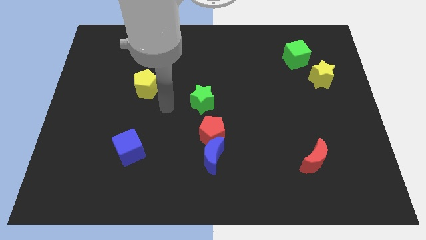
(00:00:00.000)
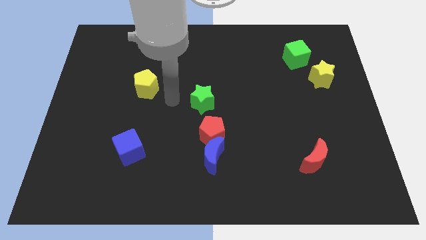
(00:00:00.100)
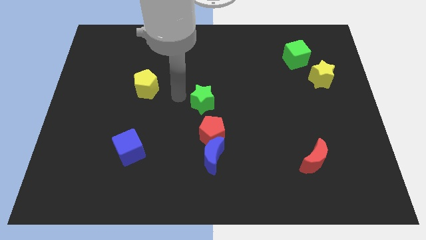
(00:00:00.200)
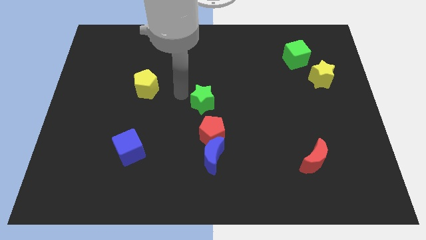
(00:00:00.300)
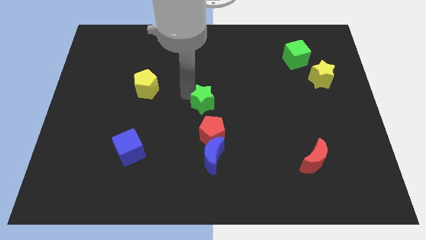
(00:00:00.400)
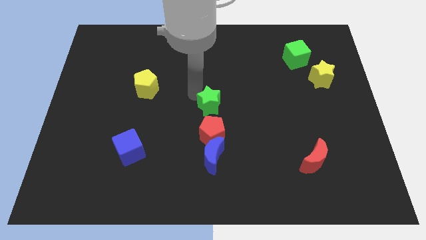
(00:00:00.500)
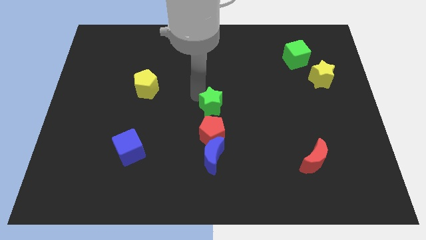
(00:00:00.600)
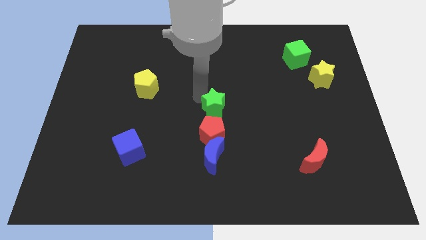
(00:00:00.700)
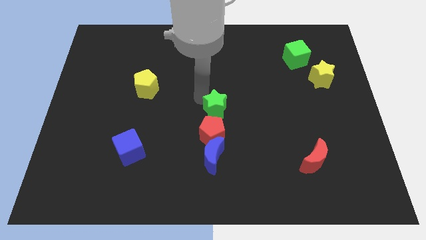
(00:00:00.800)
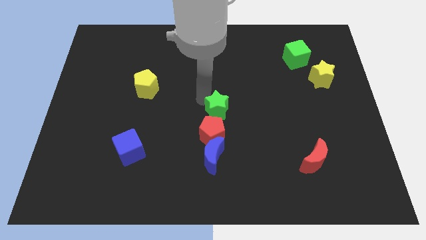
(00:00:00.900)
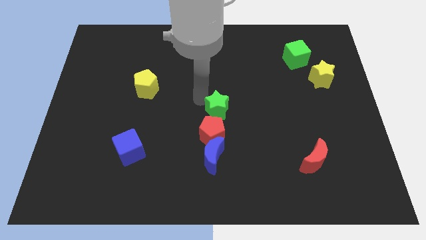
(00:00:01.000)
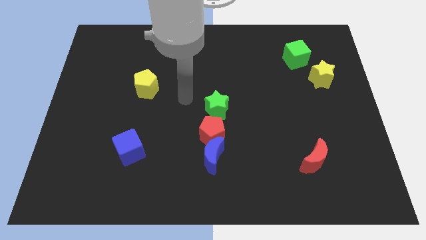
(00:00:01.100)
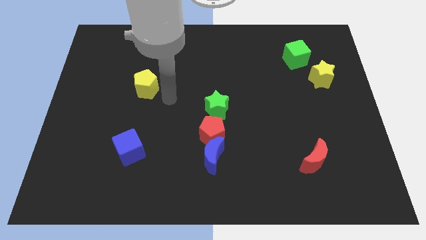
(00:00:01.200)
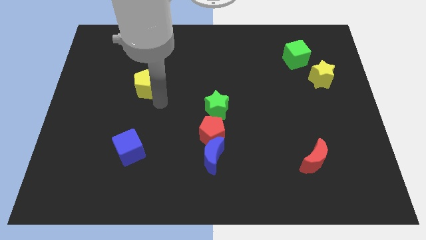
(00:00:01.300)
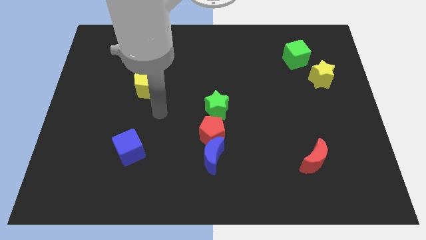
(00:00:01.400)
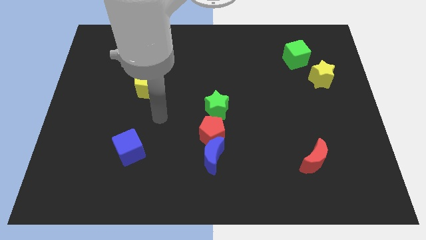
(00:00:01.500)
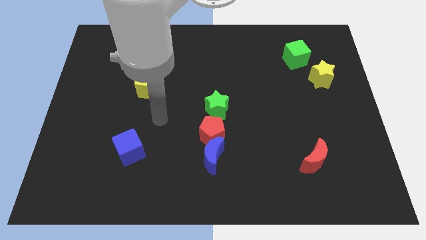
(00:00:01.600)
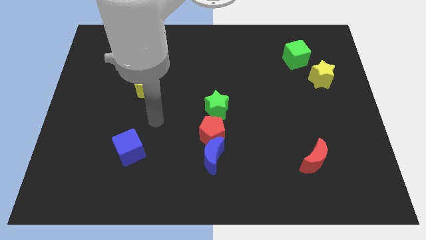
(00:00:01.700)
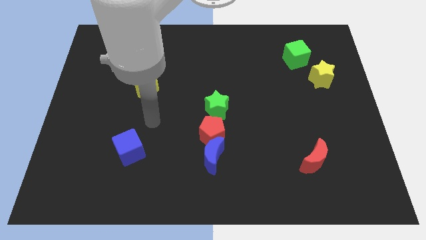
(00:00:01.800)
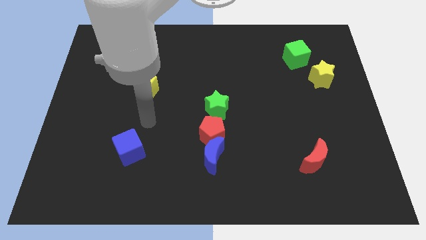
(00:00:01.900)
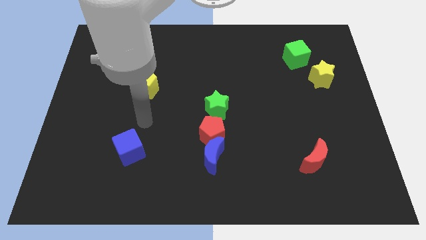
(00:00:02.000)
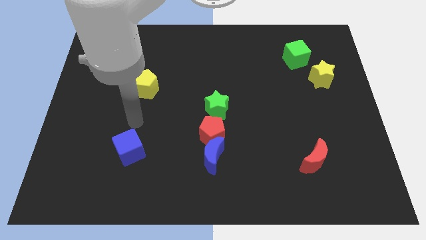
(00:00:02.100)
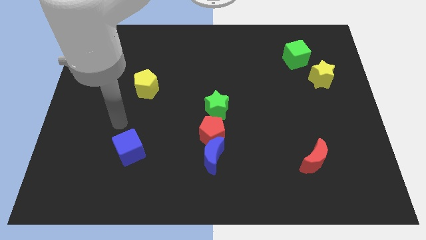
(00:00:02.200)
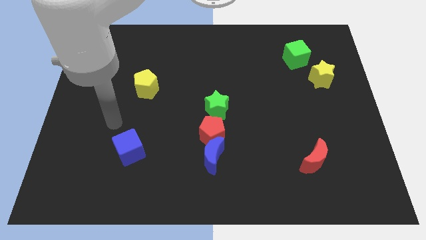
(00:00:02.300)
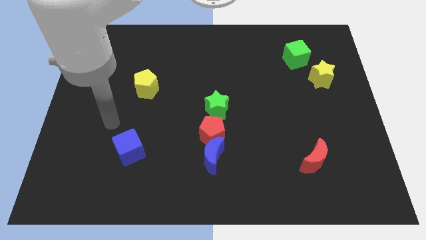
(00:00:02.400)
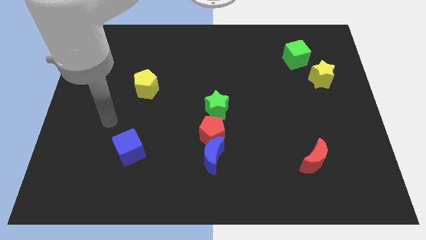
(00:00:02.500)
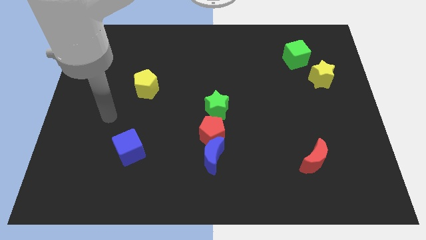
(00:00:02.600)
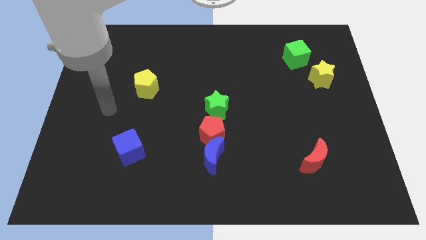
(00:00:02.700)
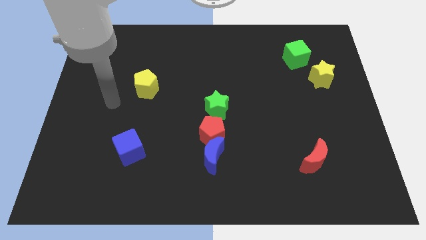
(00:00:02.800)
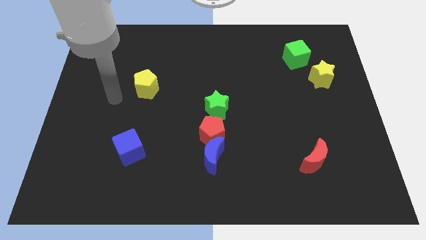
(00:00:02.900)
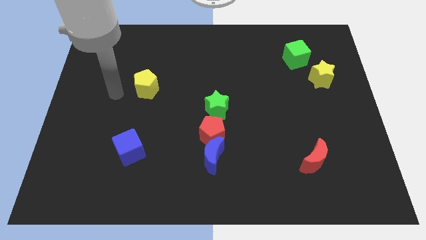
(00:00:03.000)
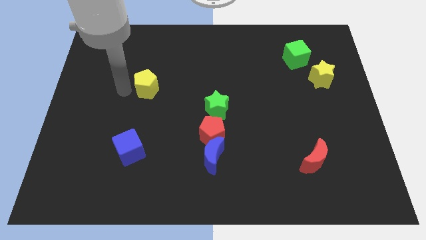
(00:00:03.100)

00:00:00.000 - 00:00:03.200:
place green star at center

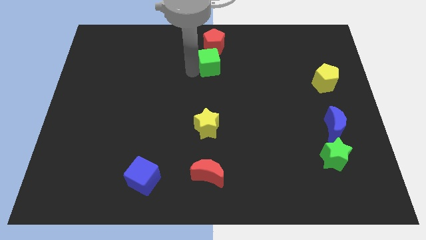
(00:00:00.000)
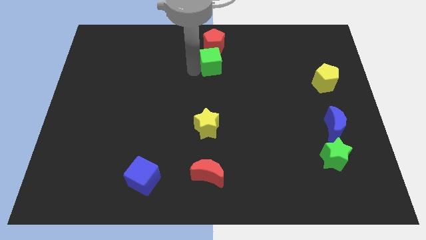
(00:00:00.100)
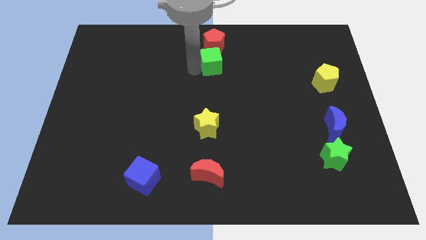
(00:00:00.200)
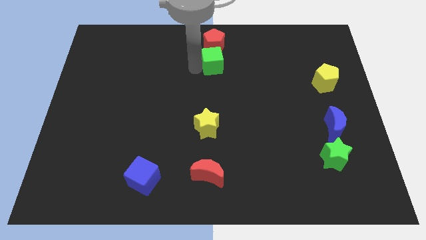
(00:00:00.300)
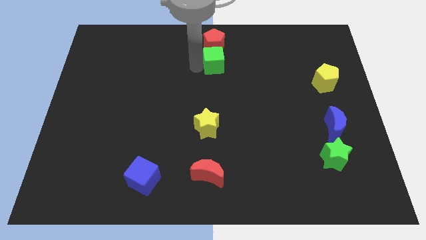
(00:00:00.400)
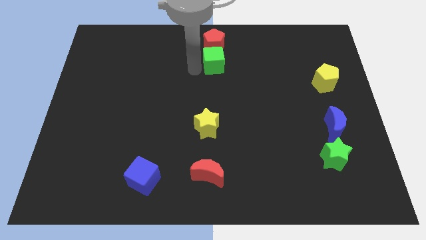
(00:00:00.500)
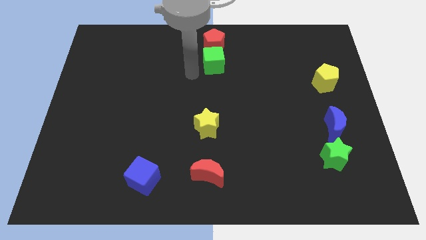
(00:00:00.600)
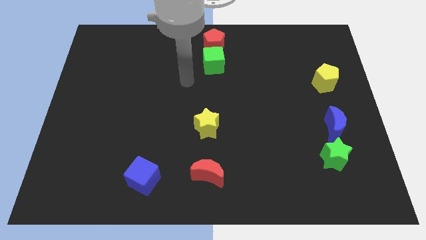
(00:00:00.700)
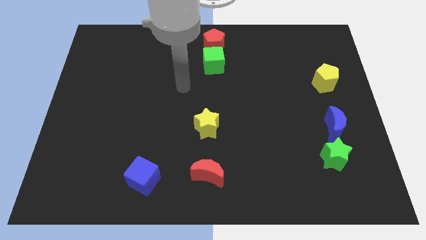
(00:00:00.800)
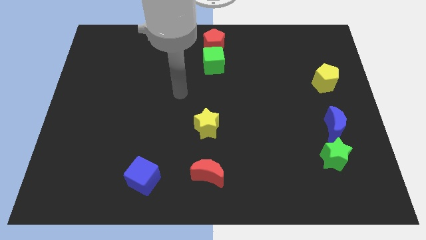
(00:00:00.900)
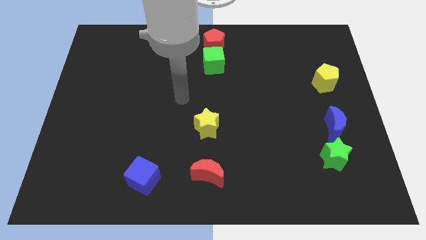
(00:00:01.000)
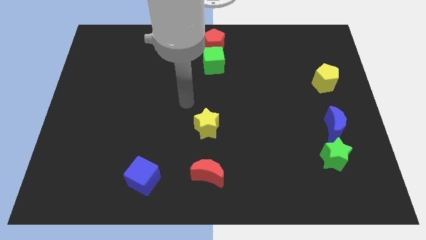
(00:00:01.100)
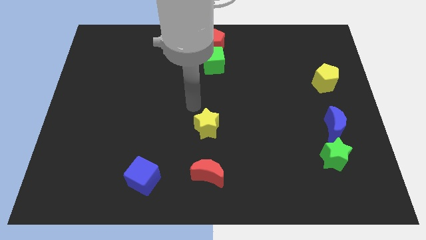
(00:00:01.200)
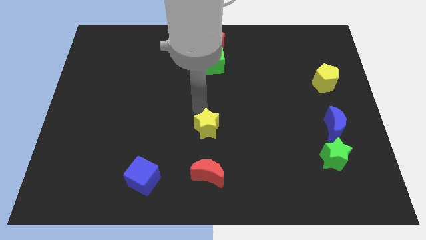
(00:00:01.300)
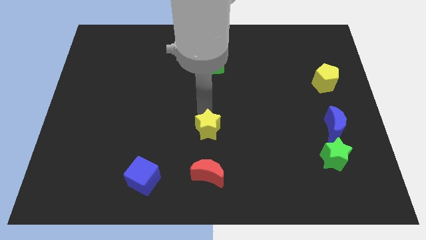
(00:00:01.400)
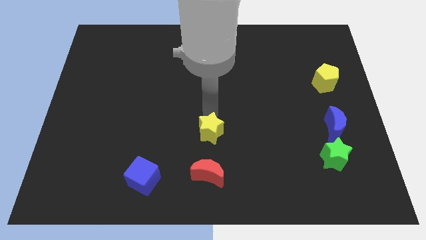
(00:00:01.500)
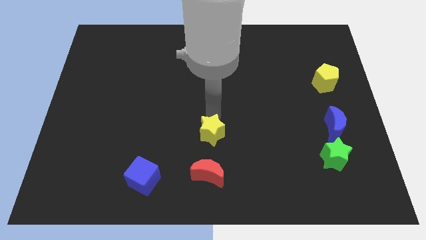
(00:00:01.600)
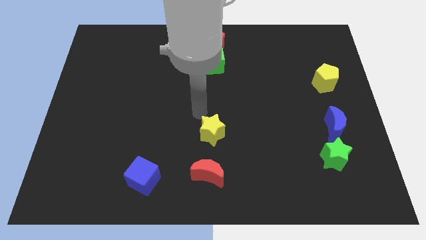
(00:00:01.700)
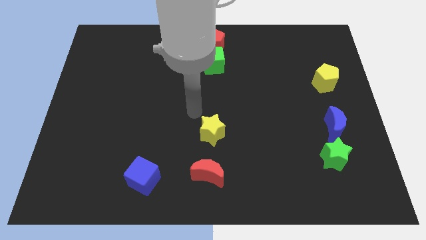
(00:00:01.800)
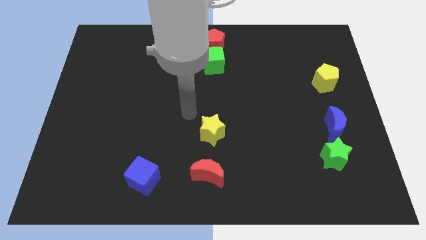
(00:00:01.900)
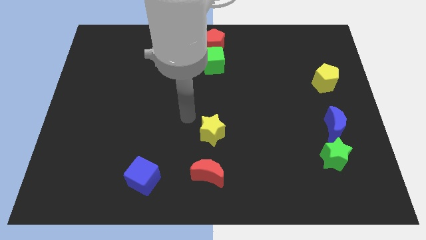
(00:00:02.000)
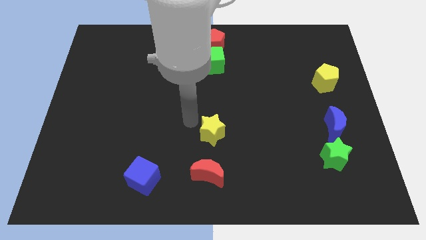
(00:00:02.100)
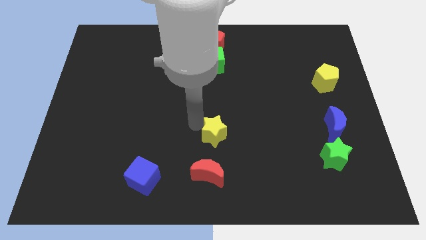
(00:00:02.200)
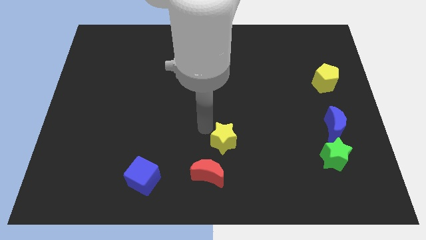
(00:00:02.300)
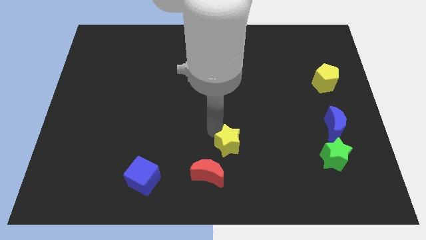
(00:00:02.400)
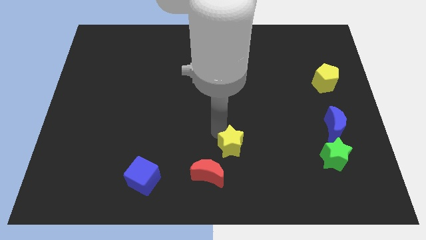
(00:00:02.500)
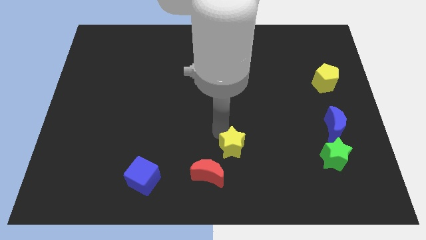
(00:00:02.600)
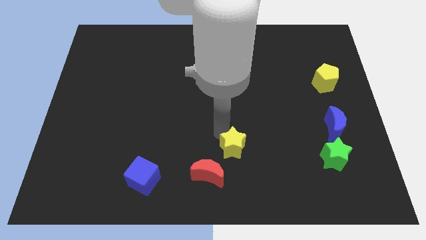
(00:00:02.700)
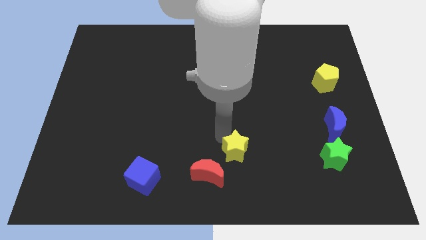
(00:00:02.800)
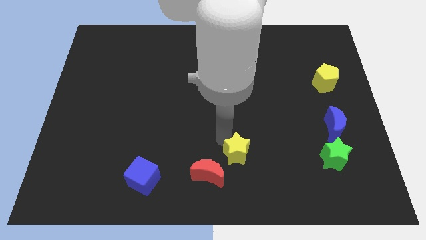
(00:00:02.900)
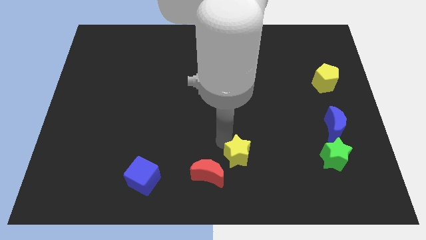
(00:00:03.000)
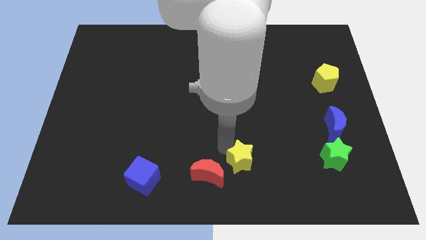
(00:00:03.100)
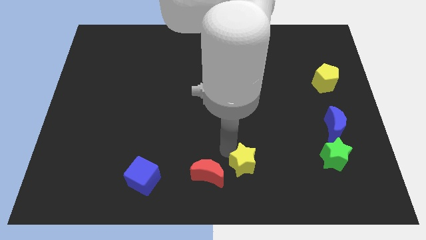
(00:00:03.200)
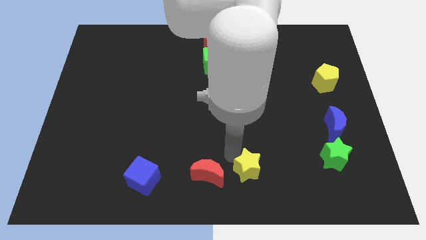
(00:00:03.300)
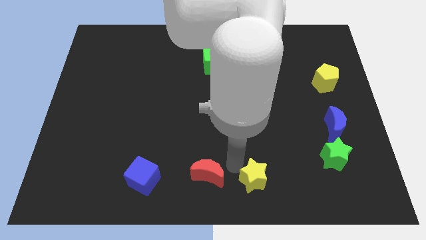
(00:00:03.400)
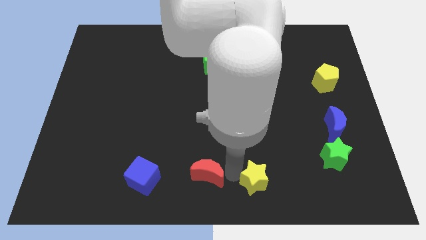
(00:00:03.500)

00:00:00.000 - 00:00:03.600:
move the yellow star to the right of the red crescent

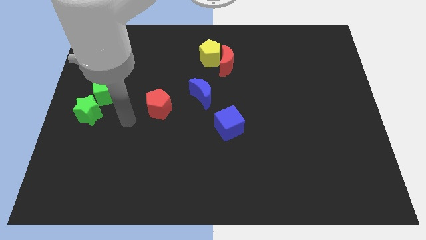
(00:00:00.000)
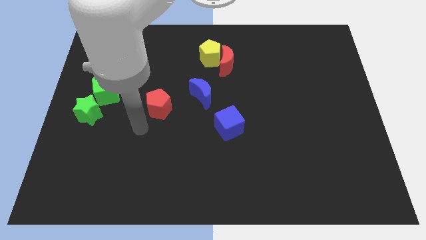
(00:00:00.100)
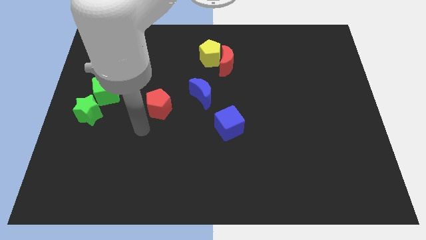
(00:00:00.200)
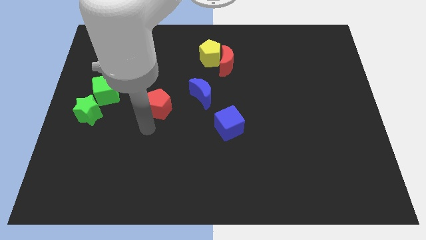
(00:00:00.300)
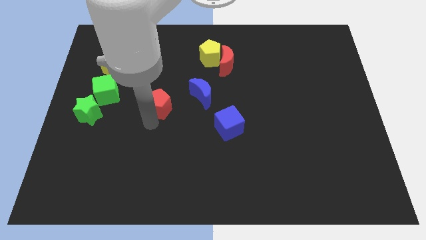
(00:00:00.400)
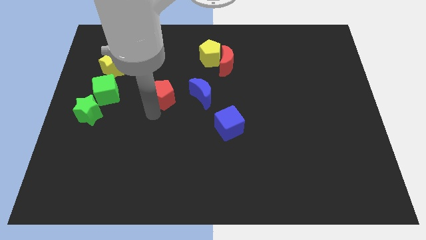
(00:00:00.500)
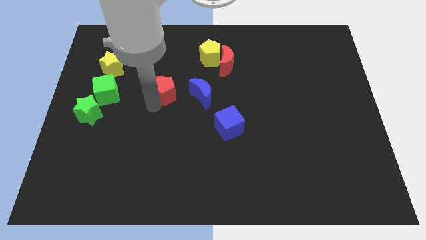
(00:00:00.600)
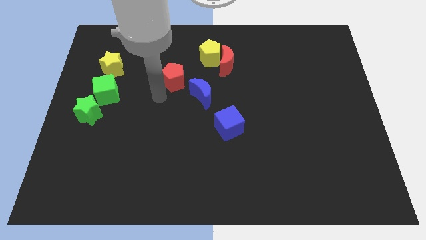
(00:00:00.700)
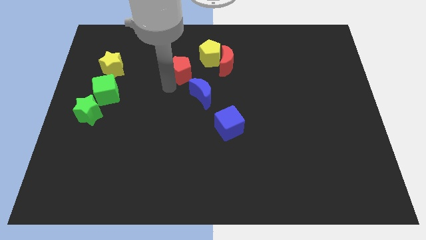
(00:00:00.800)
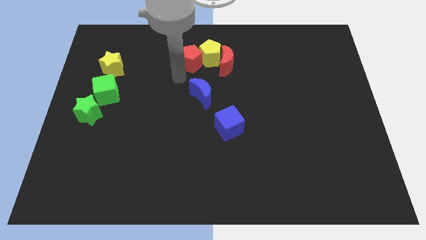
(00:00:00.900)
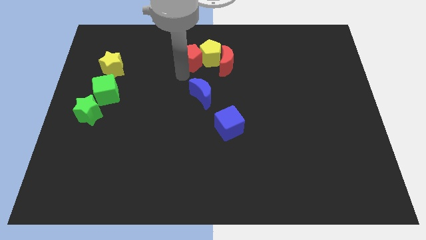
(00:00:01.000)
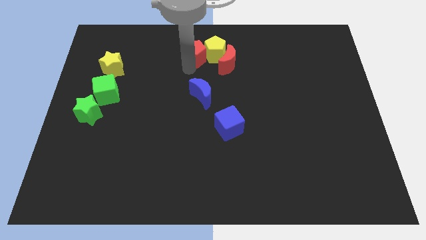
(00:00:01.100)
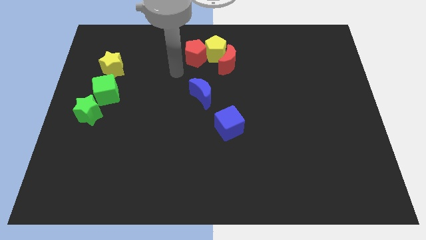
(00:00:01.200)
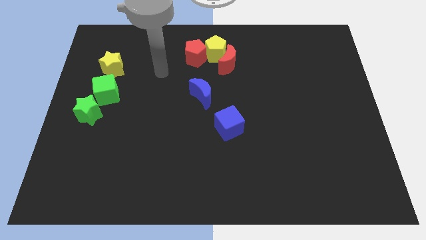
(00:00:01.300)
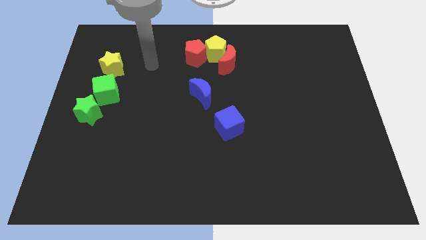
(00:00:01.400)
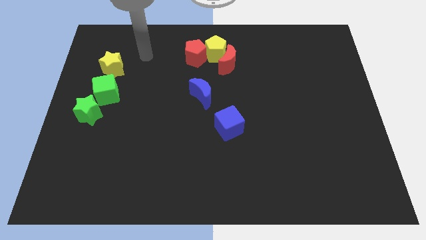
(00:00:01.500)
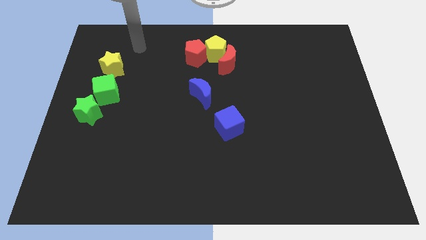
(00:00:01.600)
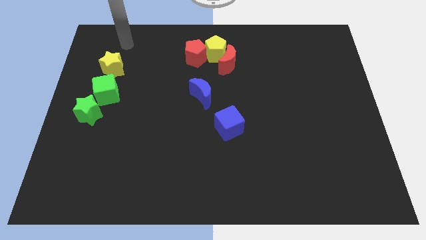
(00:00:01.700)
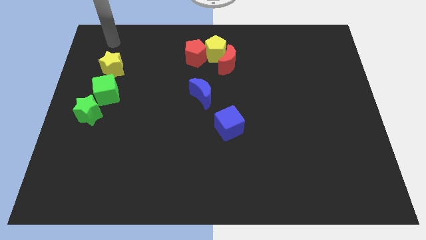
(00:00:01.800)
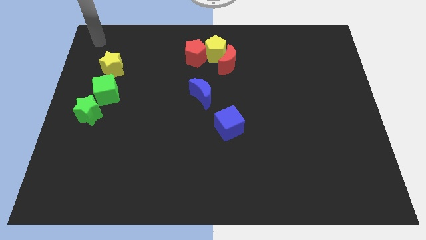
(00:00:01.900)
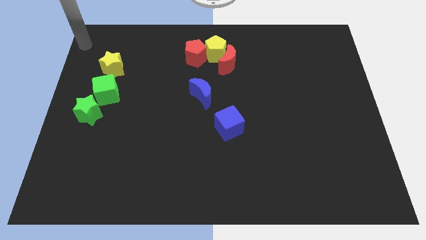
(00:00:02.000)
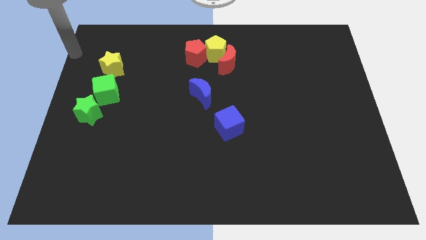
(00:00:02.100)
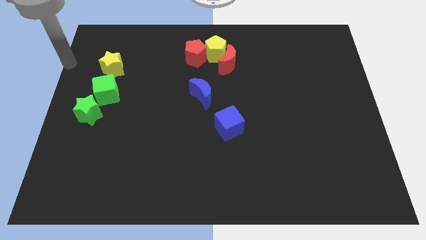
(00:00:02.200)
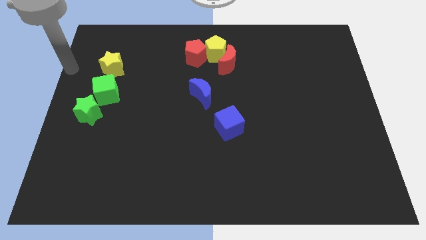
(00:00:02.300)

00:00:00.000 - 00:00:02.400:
move red pentagon into the yellow pentagon
